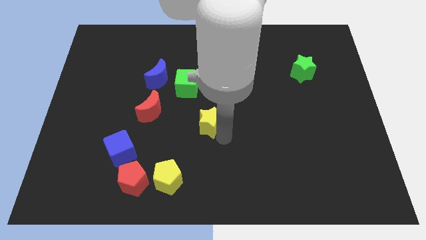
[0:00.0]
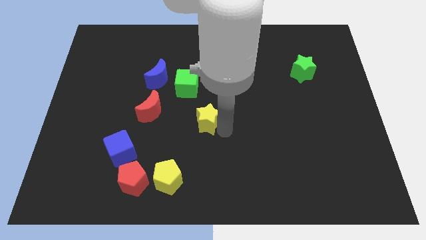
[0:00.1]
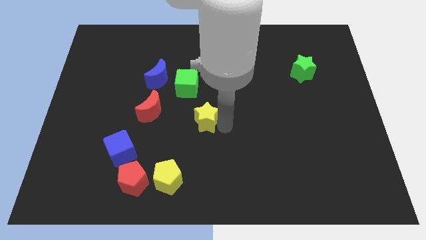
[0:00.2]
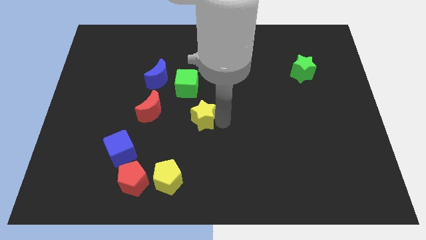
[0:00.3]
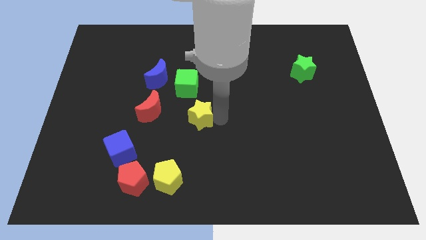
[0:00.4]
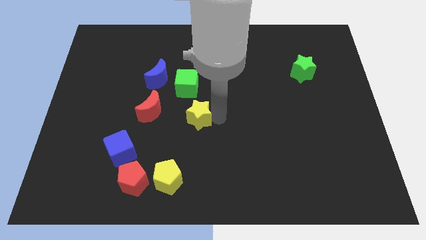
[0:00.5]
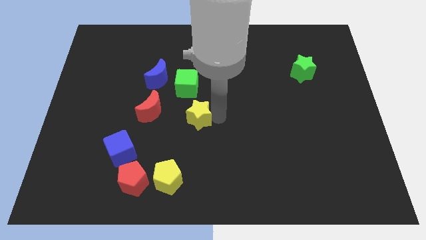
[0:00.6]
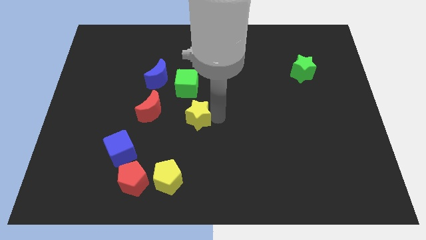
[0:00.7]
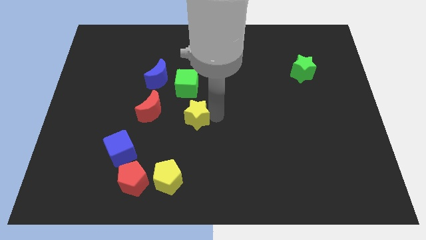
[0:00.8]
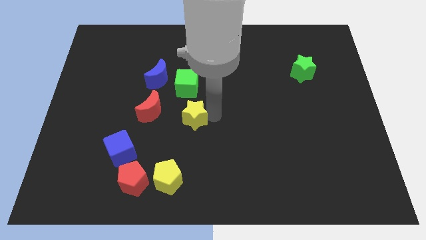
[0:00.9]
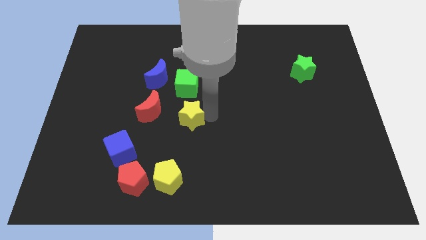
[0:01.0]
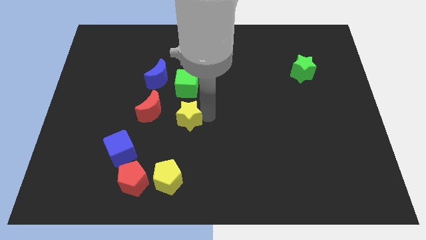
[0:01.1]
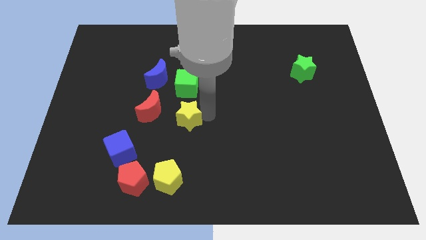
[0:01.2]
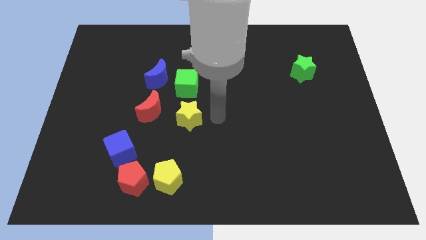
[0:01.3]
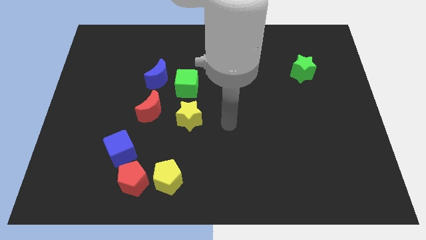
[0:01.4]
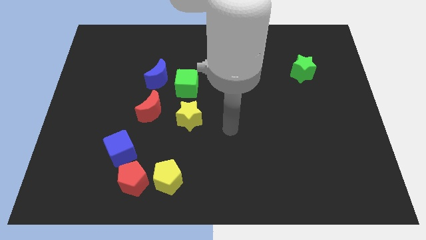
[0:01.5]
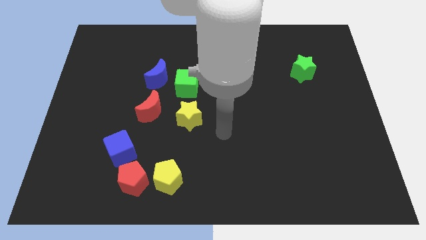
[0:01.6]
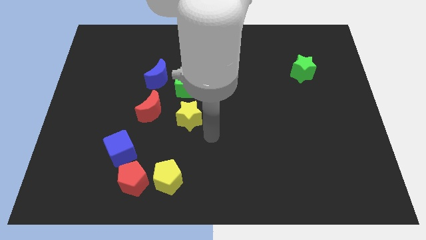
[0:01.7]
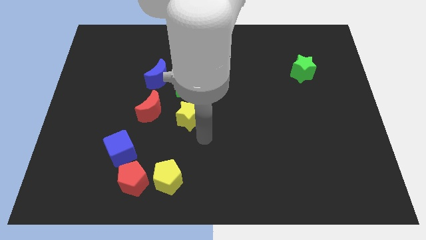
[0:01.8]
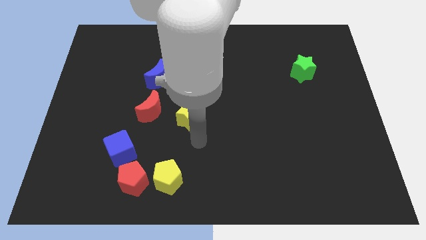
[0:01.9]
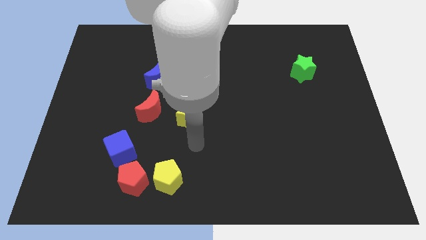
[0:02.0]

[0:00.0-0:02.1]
place yellow star down to the green cube

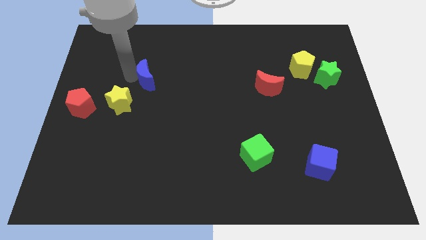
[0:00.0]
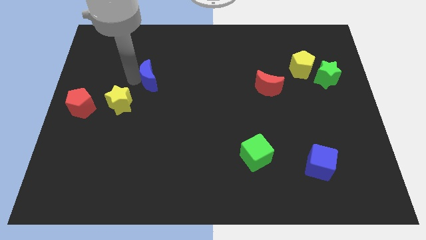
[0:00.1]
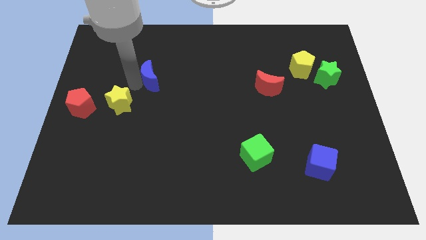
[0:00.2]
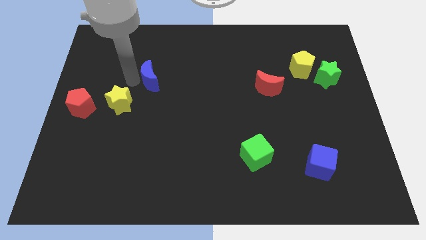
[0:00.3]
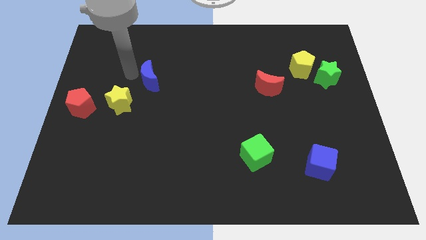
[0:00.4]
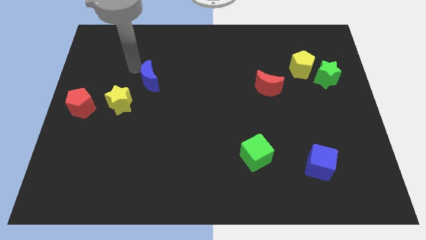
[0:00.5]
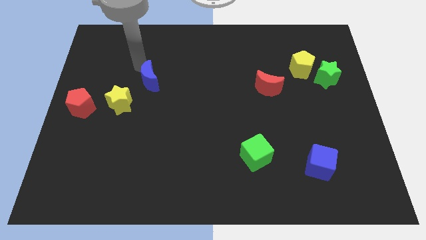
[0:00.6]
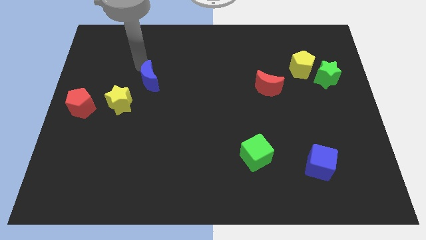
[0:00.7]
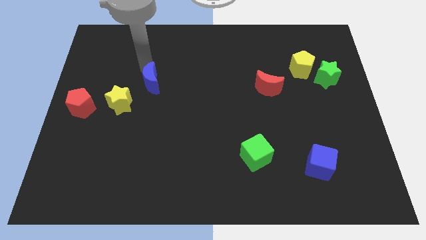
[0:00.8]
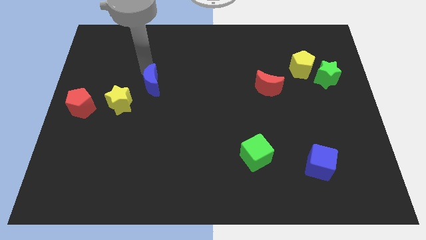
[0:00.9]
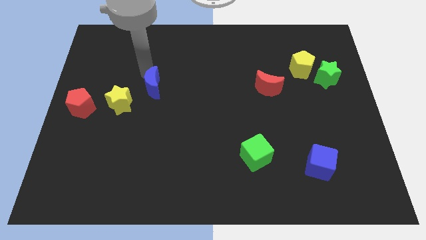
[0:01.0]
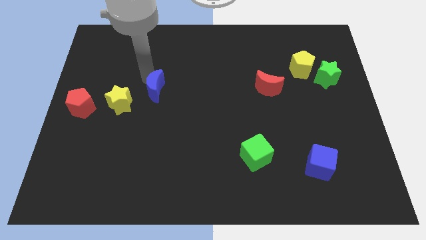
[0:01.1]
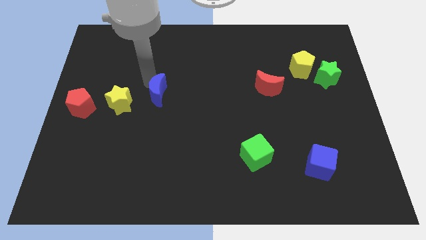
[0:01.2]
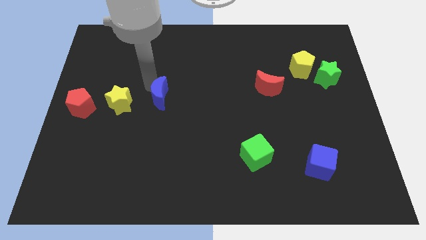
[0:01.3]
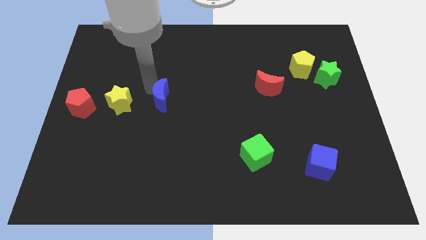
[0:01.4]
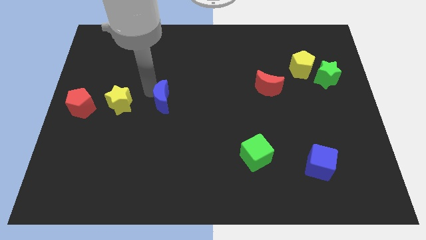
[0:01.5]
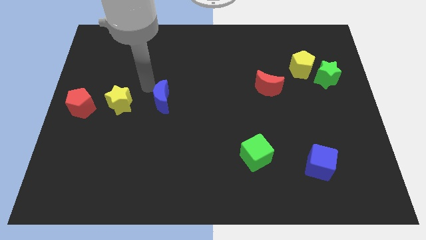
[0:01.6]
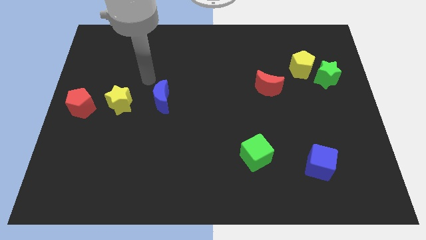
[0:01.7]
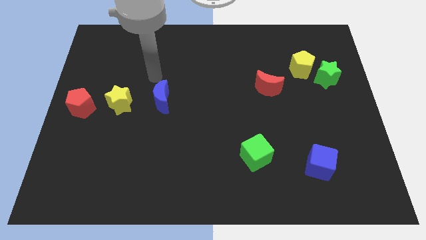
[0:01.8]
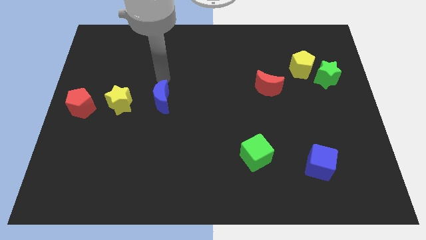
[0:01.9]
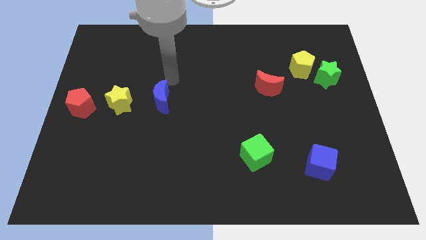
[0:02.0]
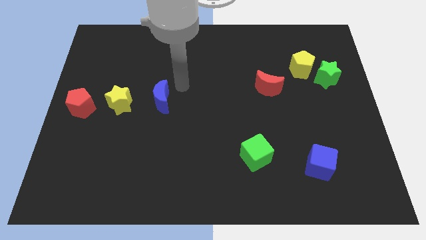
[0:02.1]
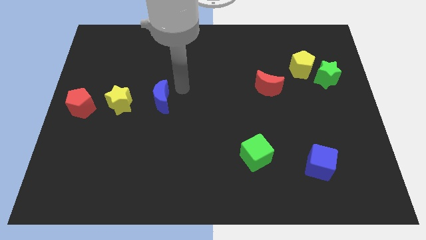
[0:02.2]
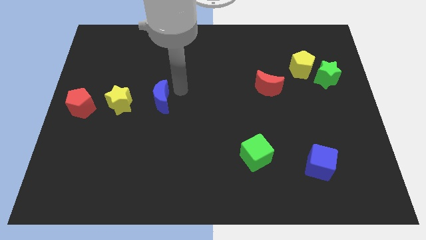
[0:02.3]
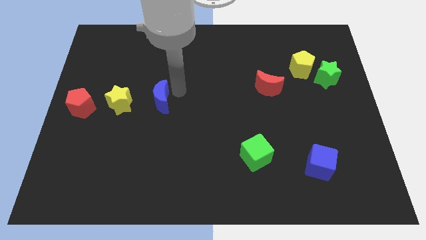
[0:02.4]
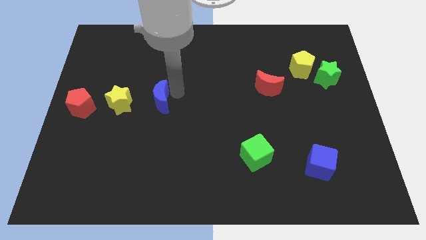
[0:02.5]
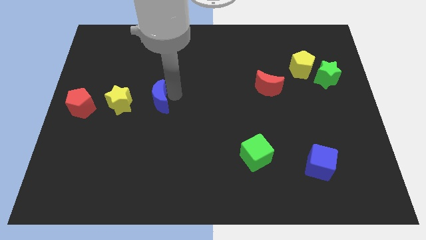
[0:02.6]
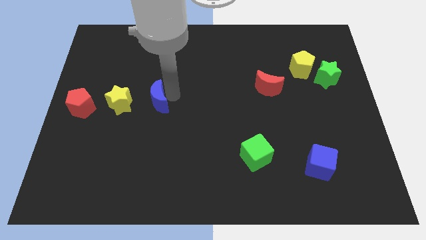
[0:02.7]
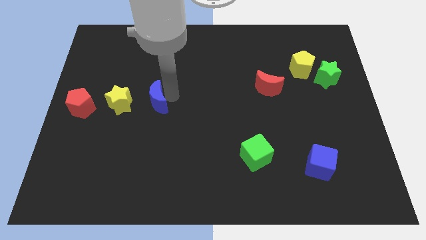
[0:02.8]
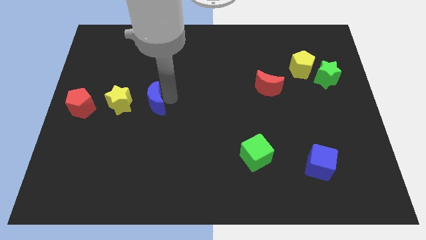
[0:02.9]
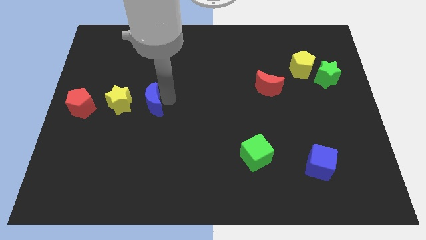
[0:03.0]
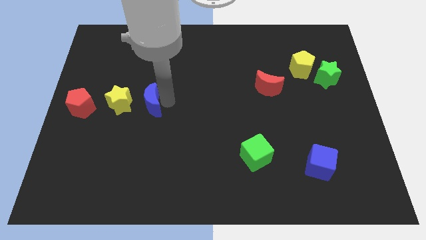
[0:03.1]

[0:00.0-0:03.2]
move the blue moon right to the yellow star

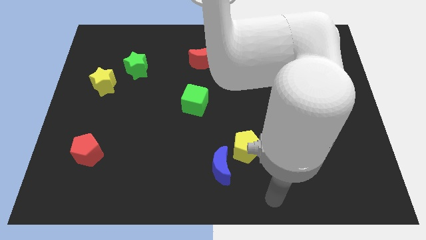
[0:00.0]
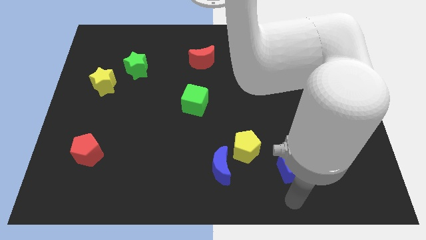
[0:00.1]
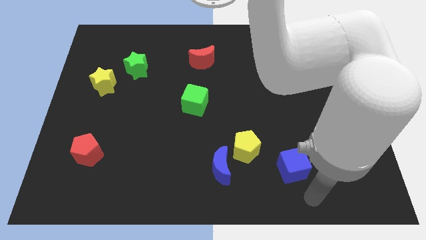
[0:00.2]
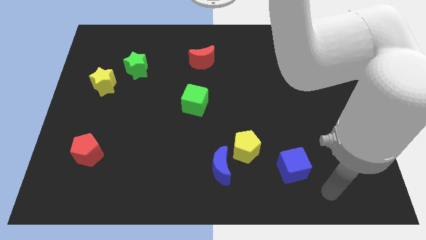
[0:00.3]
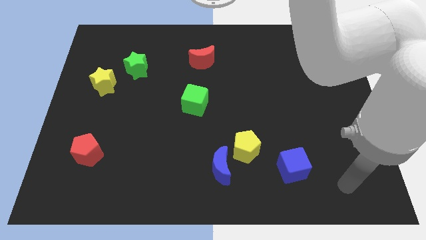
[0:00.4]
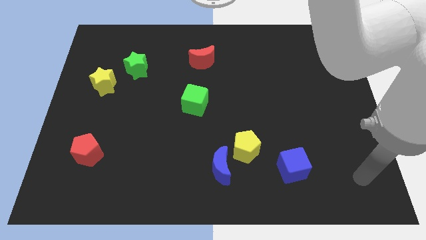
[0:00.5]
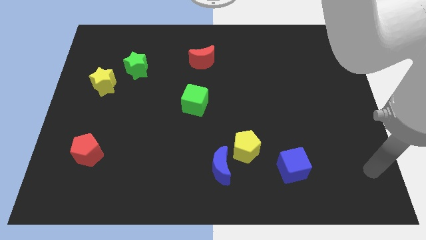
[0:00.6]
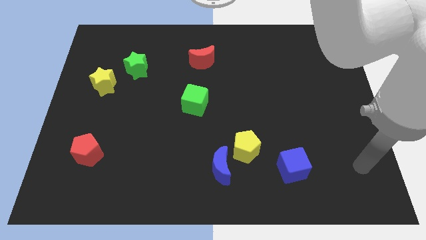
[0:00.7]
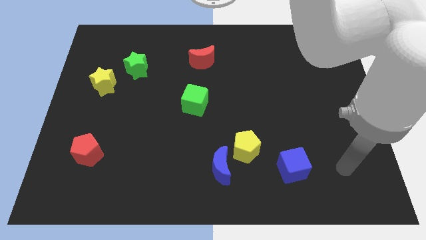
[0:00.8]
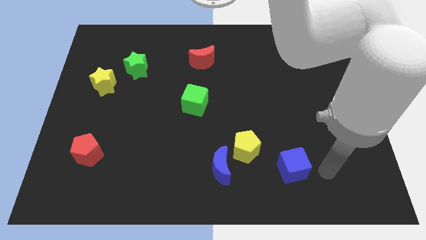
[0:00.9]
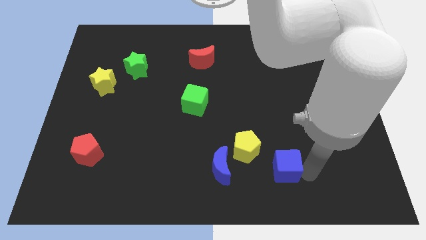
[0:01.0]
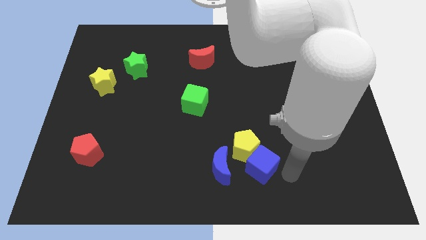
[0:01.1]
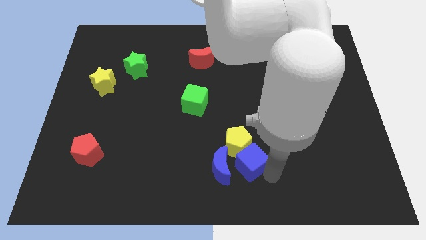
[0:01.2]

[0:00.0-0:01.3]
push the blue cube into the yellow pentagon

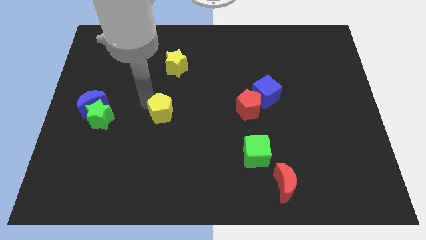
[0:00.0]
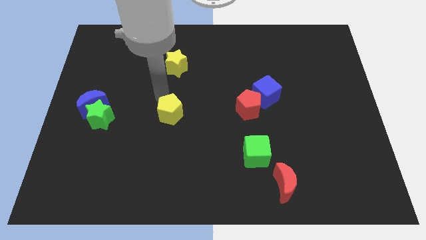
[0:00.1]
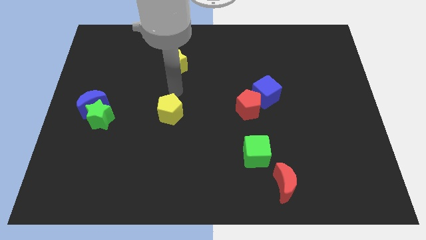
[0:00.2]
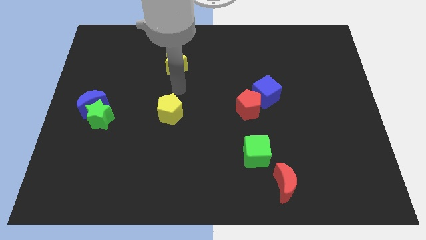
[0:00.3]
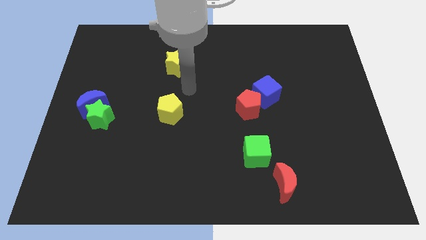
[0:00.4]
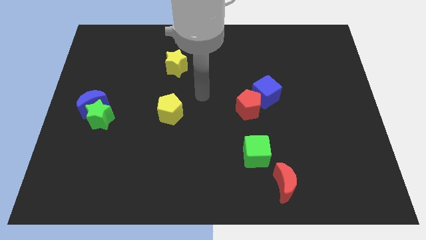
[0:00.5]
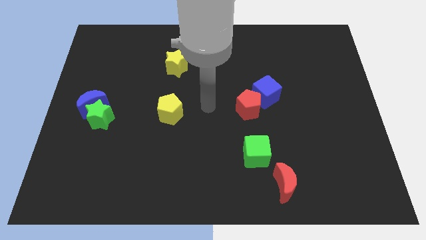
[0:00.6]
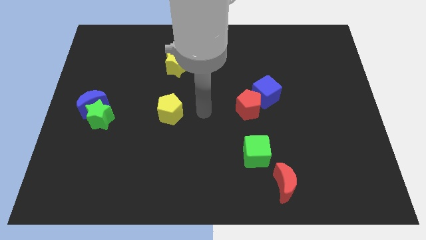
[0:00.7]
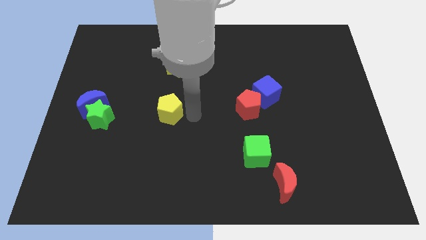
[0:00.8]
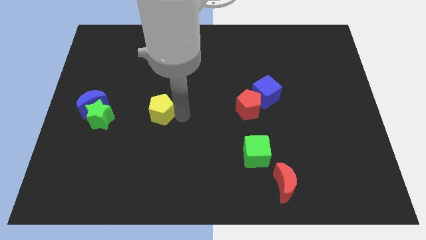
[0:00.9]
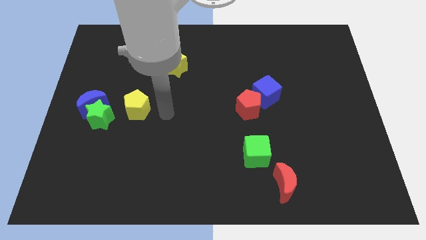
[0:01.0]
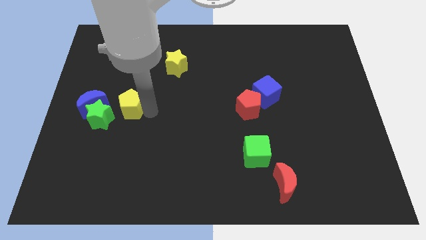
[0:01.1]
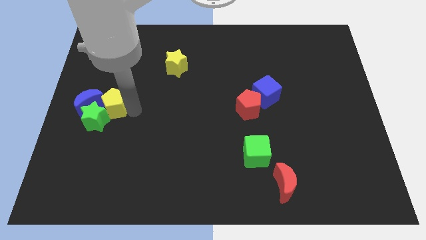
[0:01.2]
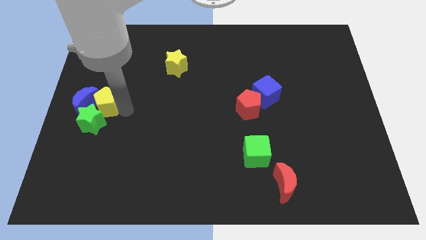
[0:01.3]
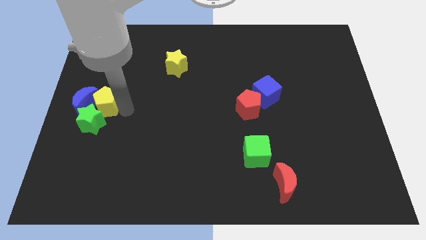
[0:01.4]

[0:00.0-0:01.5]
push the yellow pentagon into a group of blocks

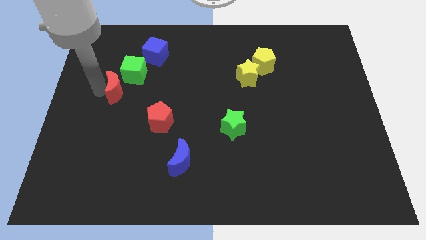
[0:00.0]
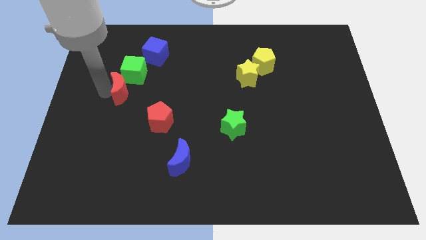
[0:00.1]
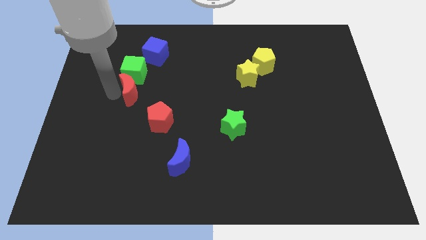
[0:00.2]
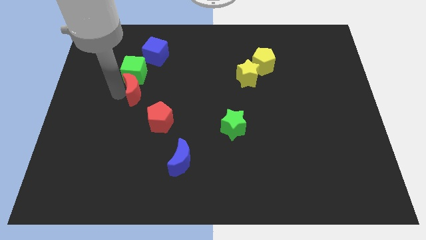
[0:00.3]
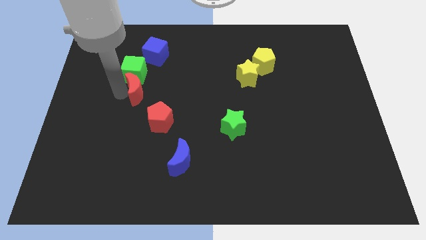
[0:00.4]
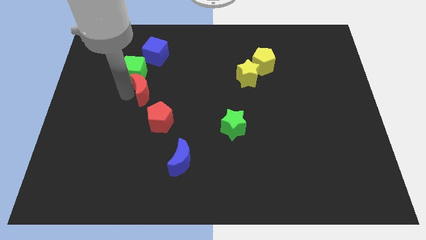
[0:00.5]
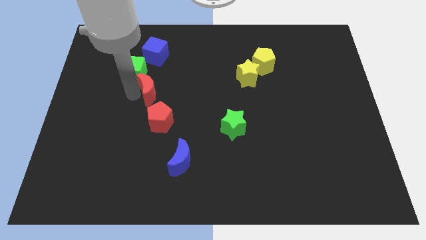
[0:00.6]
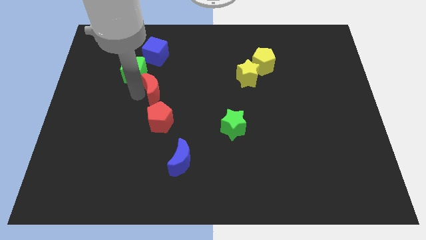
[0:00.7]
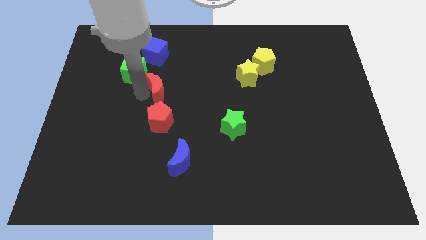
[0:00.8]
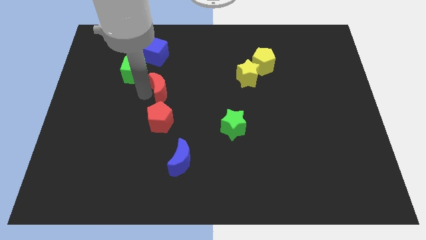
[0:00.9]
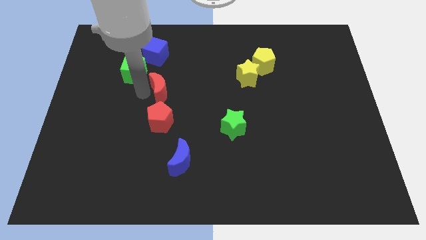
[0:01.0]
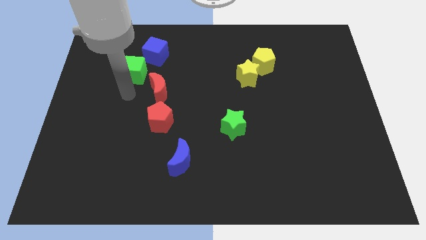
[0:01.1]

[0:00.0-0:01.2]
move the red crescent to the top of the red pentagon
